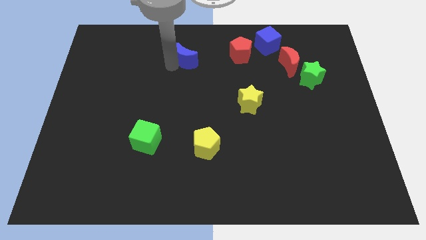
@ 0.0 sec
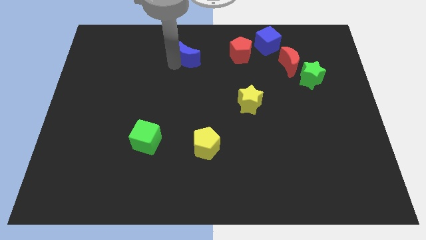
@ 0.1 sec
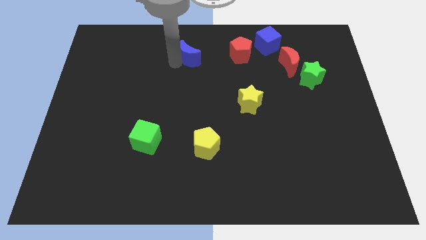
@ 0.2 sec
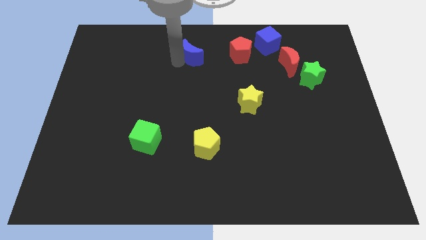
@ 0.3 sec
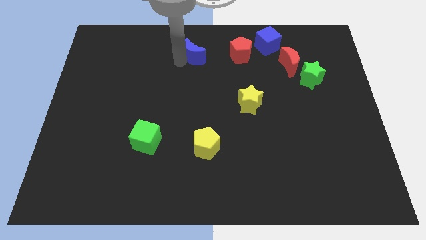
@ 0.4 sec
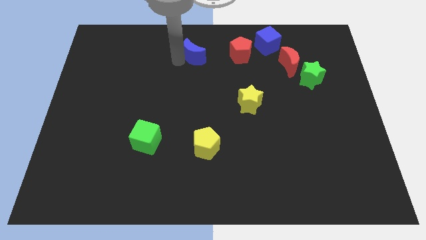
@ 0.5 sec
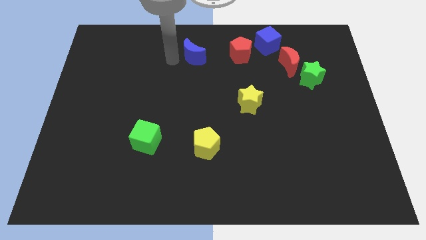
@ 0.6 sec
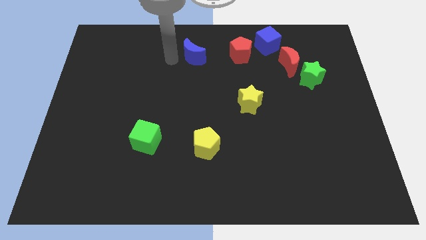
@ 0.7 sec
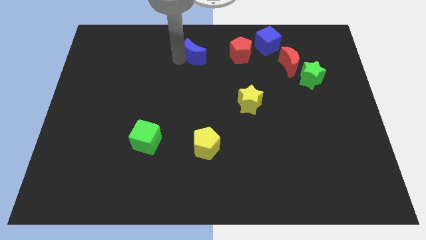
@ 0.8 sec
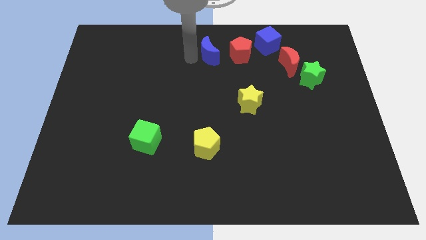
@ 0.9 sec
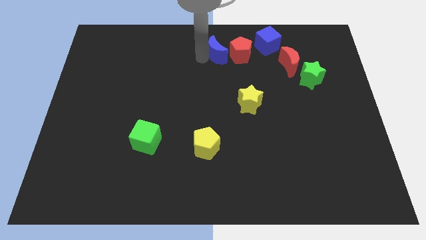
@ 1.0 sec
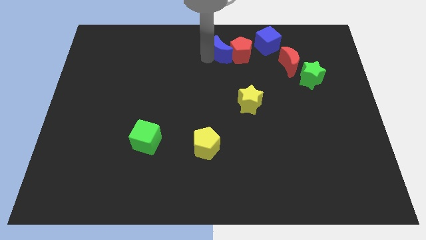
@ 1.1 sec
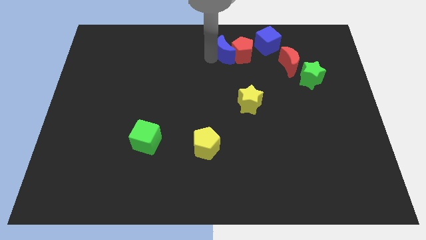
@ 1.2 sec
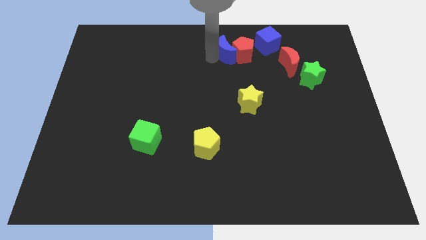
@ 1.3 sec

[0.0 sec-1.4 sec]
push the blue crescent into the red pentagon

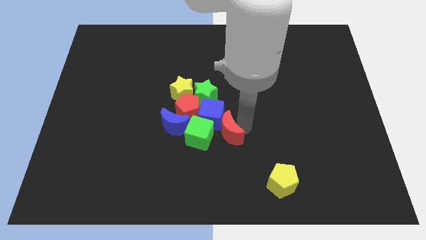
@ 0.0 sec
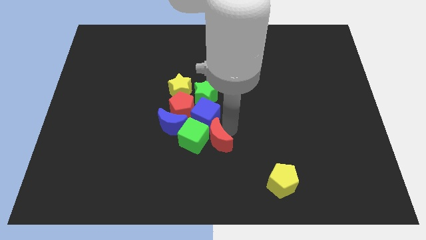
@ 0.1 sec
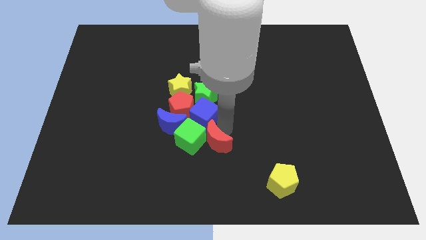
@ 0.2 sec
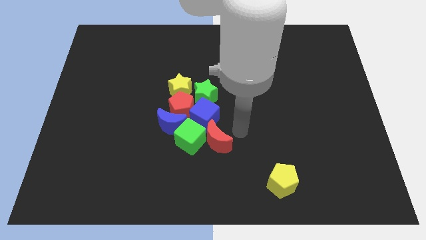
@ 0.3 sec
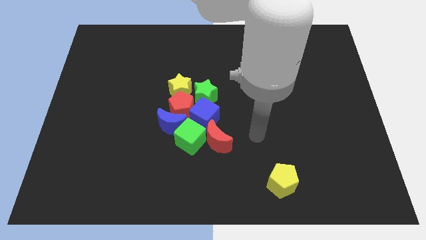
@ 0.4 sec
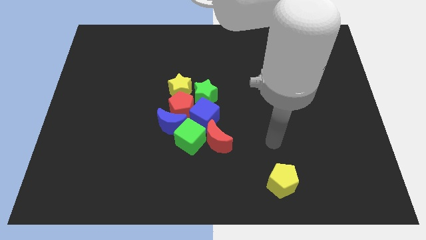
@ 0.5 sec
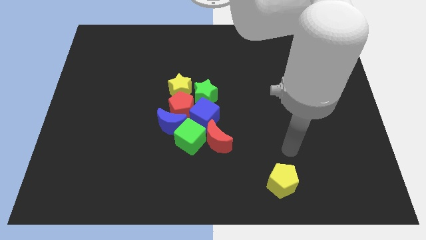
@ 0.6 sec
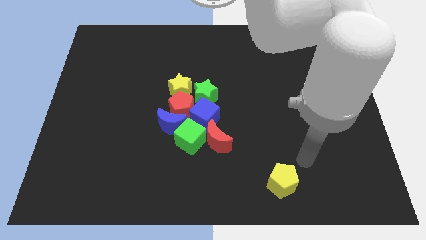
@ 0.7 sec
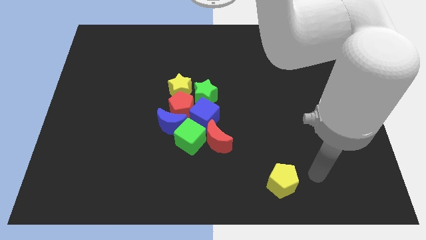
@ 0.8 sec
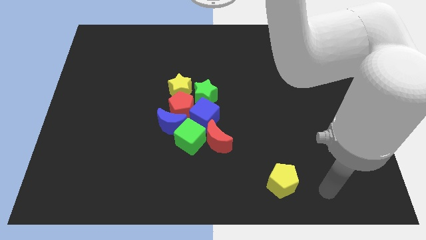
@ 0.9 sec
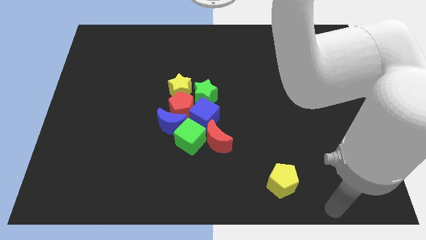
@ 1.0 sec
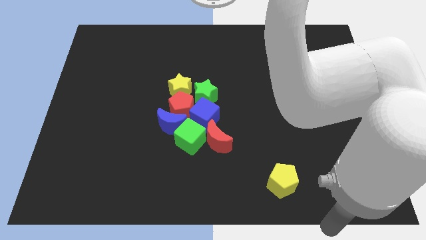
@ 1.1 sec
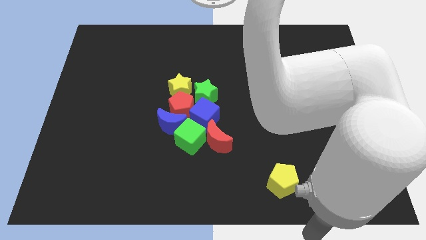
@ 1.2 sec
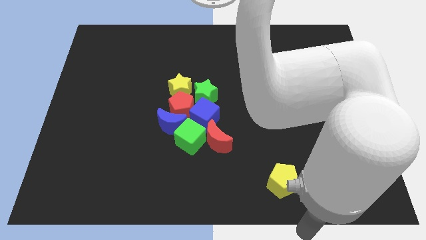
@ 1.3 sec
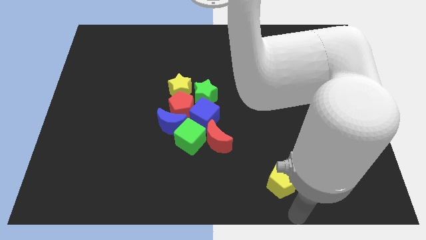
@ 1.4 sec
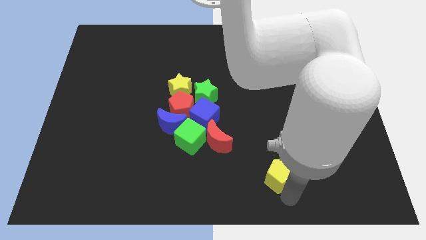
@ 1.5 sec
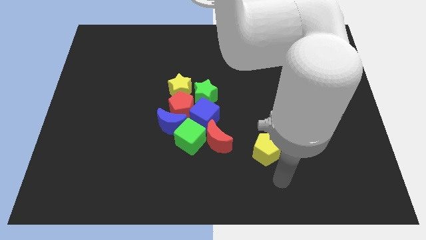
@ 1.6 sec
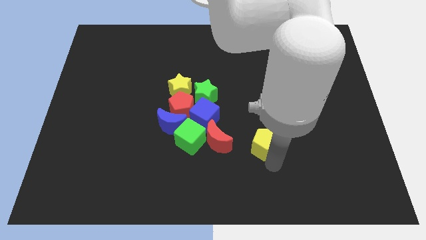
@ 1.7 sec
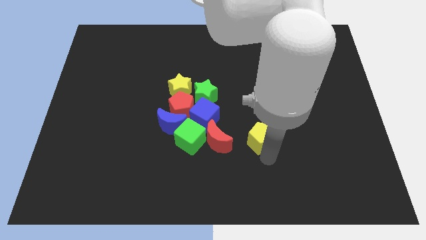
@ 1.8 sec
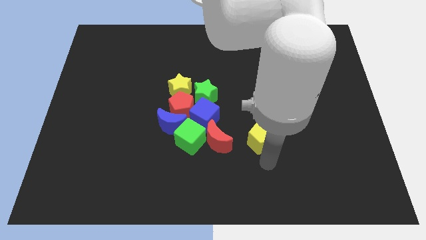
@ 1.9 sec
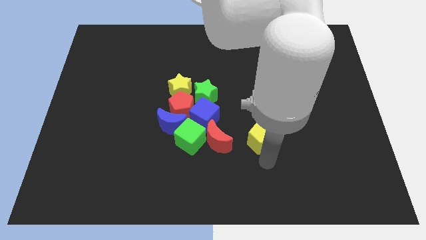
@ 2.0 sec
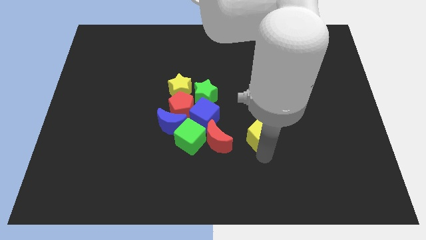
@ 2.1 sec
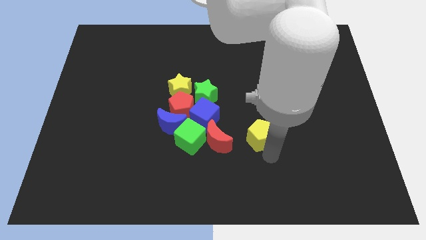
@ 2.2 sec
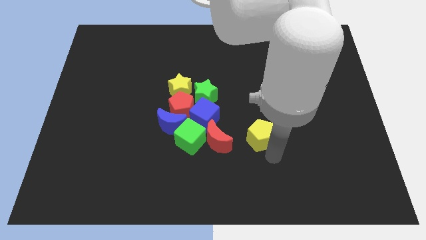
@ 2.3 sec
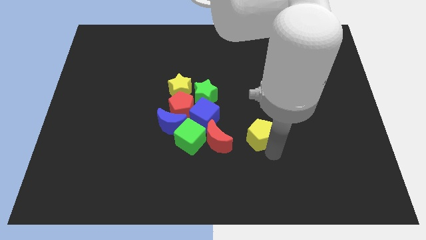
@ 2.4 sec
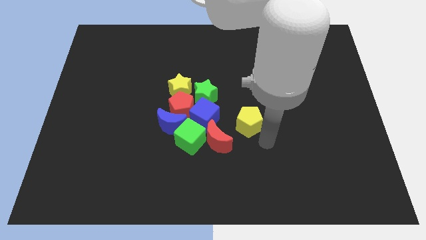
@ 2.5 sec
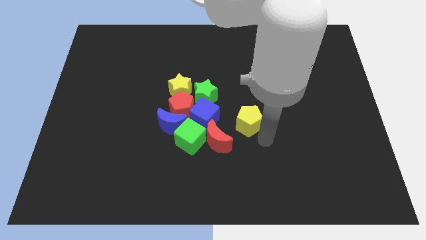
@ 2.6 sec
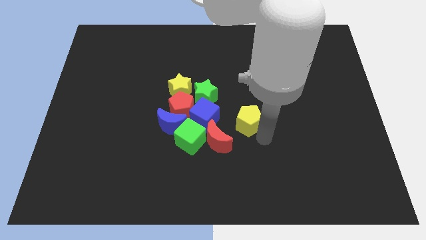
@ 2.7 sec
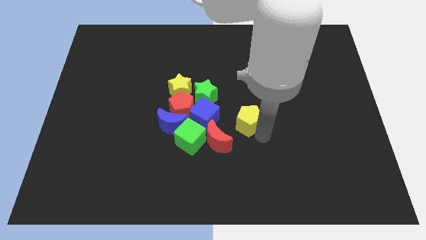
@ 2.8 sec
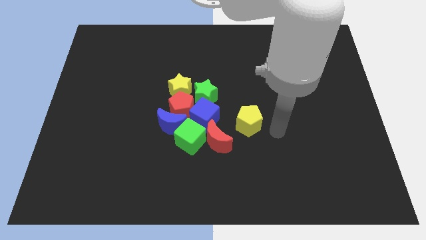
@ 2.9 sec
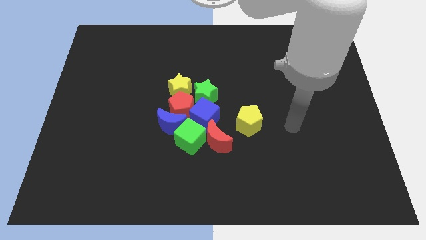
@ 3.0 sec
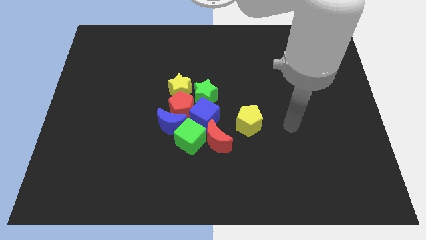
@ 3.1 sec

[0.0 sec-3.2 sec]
place the yellow pentagon right to the blue cube

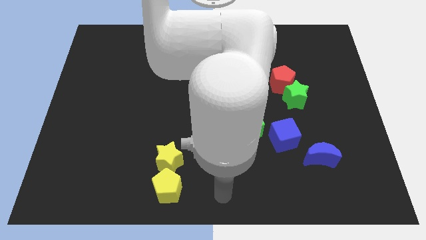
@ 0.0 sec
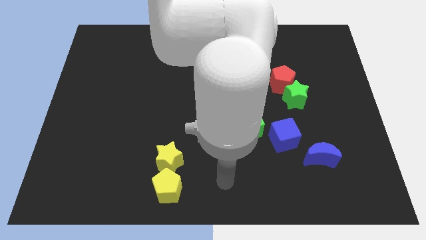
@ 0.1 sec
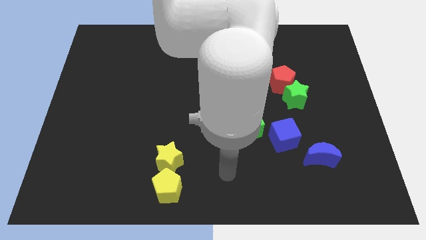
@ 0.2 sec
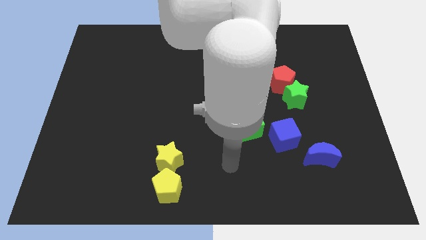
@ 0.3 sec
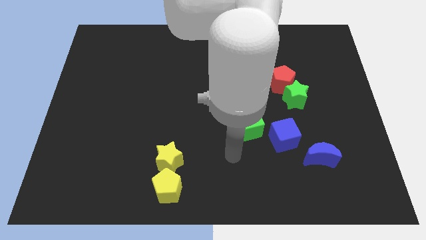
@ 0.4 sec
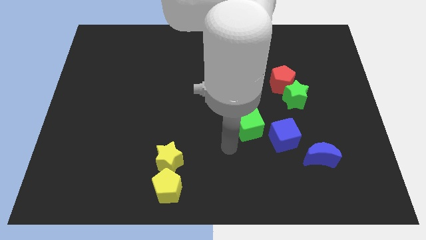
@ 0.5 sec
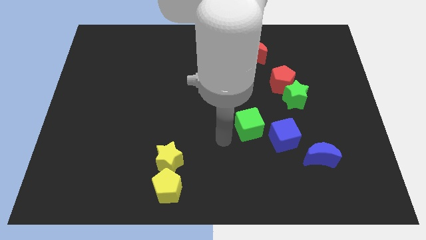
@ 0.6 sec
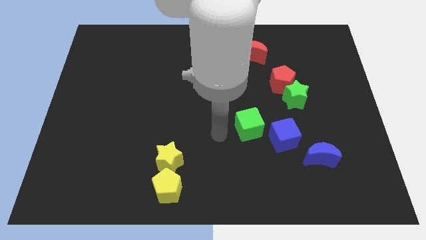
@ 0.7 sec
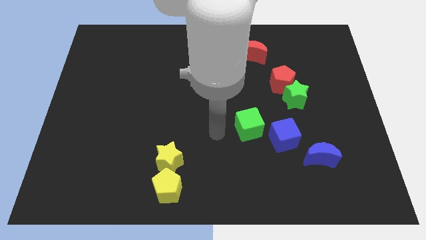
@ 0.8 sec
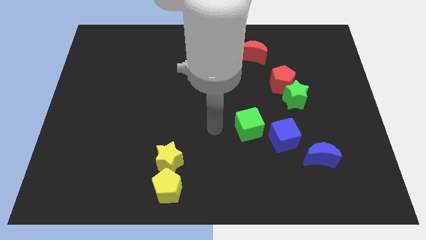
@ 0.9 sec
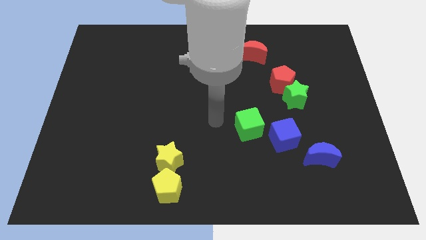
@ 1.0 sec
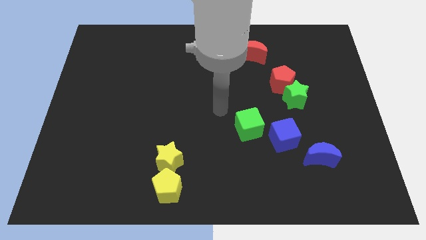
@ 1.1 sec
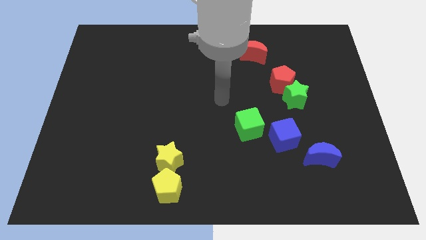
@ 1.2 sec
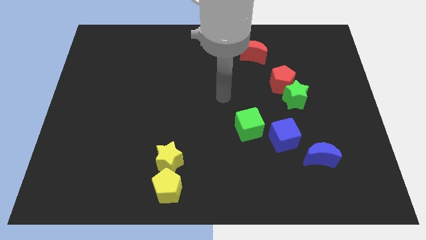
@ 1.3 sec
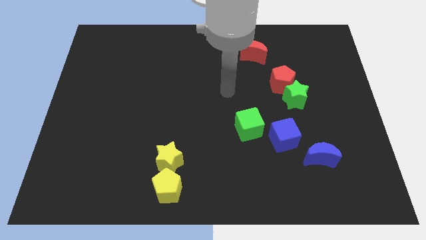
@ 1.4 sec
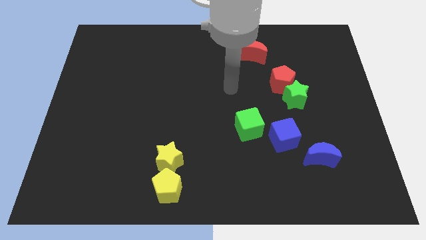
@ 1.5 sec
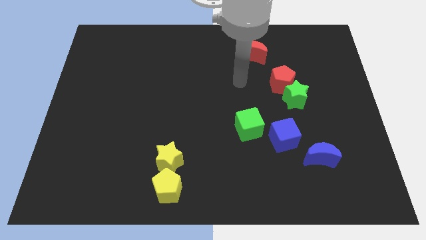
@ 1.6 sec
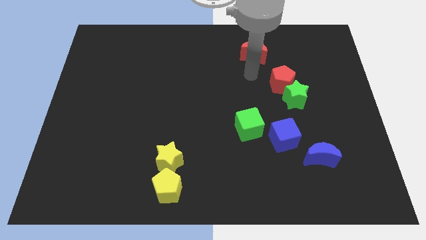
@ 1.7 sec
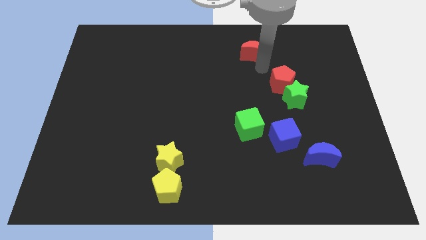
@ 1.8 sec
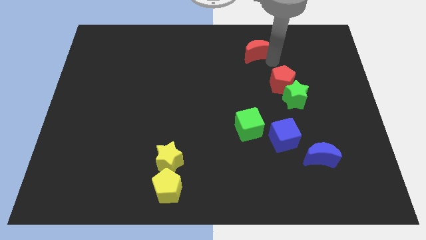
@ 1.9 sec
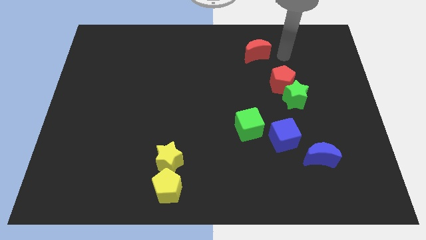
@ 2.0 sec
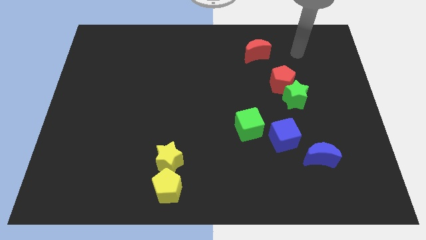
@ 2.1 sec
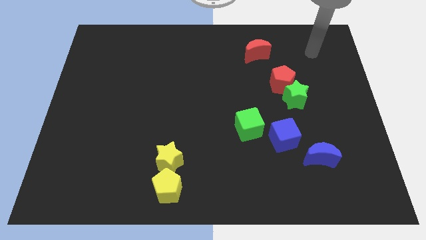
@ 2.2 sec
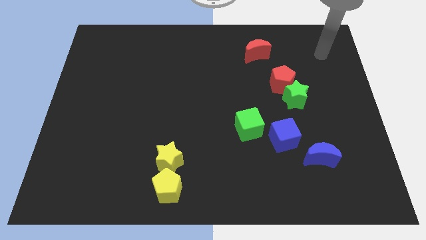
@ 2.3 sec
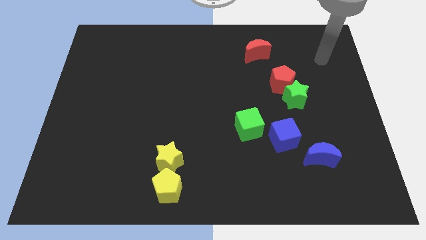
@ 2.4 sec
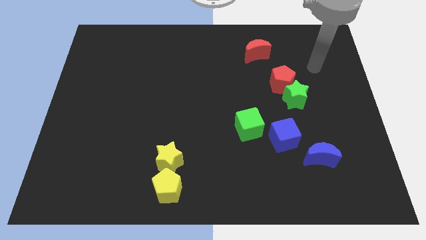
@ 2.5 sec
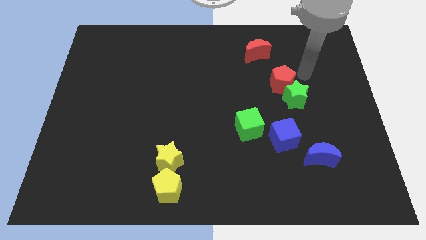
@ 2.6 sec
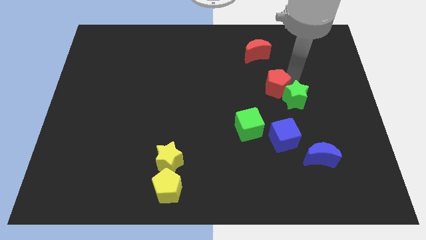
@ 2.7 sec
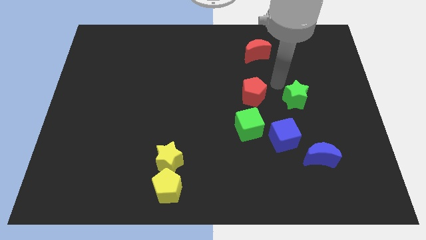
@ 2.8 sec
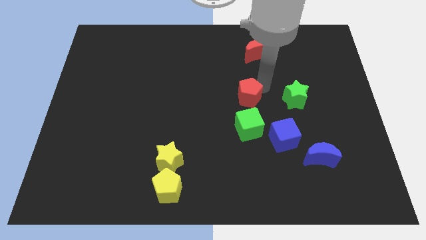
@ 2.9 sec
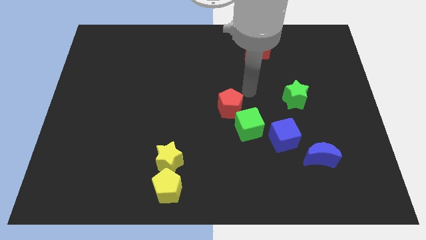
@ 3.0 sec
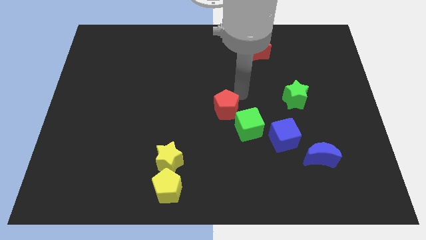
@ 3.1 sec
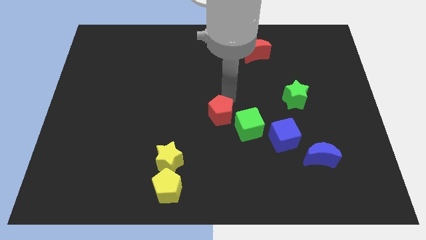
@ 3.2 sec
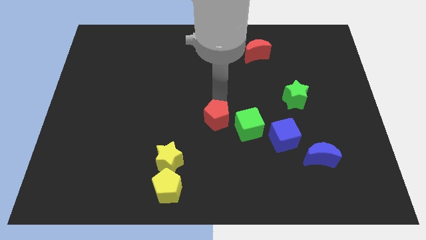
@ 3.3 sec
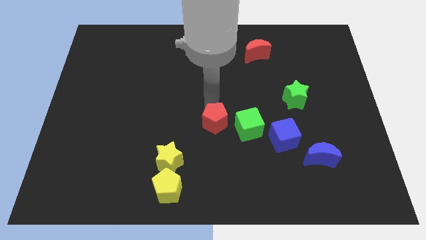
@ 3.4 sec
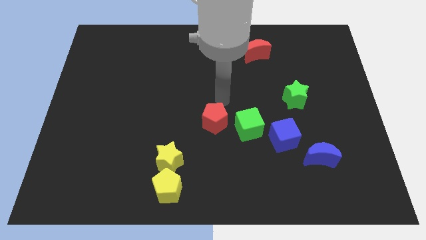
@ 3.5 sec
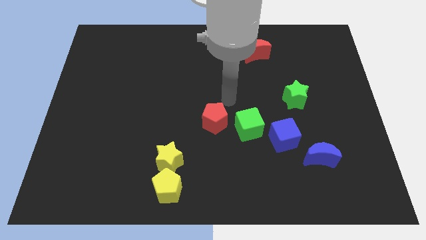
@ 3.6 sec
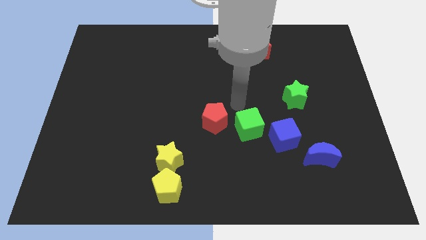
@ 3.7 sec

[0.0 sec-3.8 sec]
place the red pentagon left to the green cube

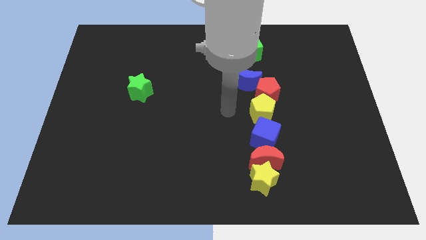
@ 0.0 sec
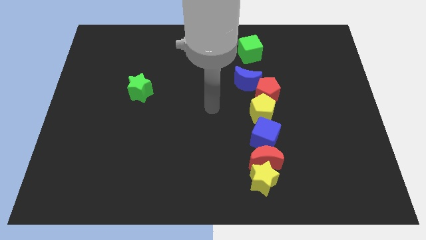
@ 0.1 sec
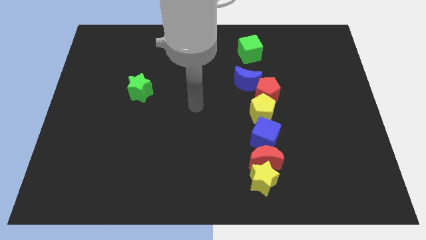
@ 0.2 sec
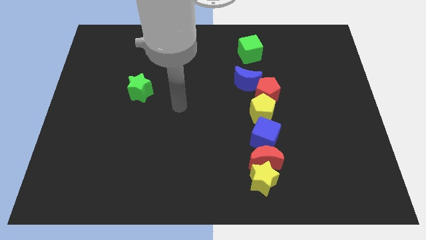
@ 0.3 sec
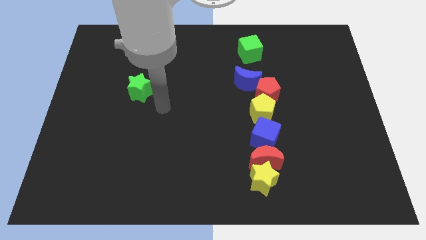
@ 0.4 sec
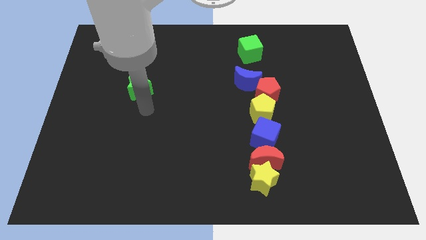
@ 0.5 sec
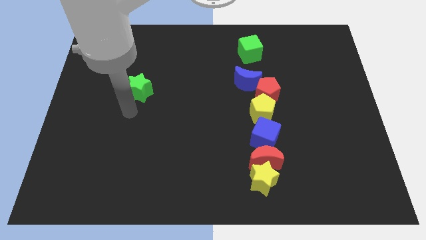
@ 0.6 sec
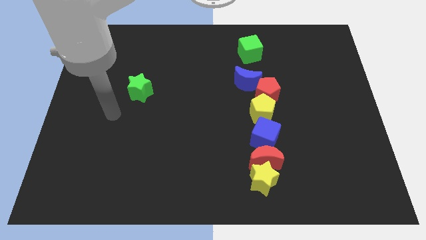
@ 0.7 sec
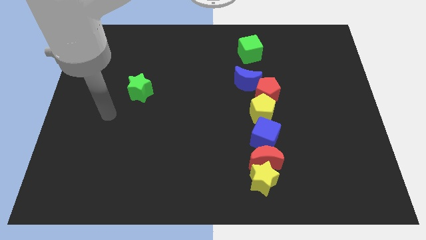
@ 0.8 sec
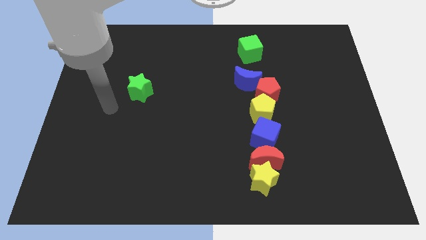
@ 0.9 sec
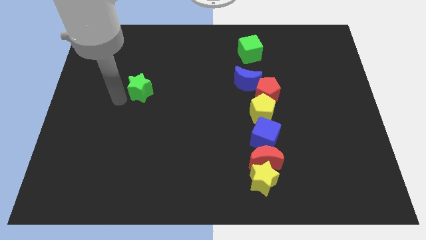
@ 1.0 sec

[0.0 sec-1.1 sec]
point the arm to the left bottom of the green star
